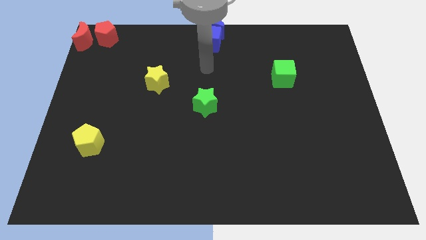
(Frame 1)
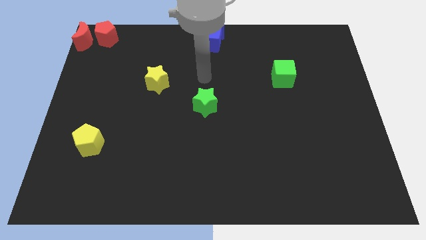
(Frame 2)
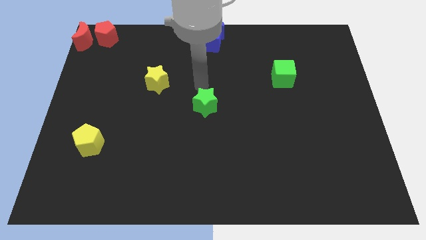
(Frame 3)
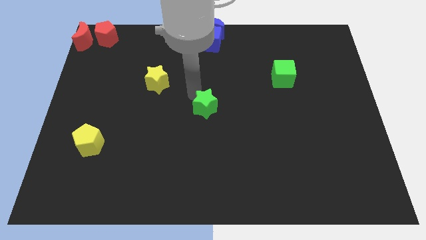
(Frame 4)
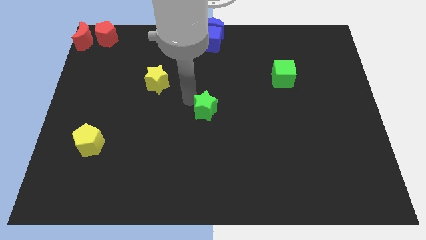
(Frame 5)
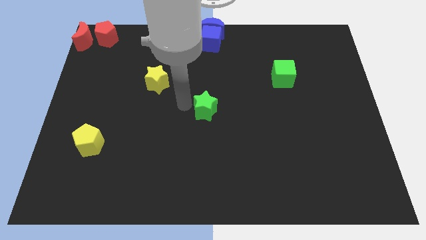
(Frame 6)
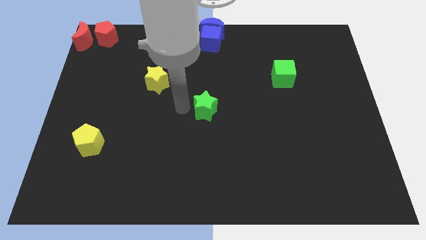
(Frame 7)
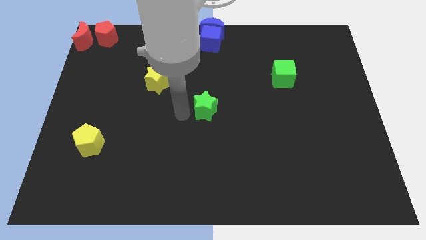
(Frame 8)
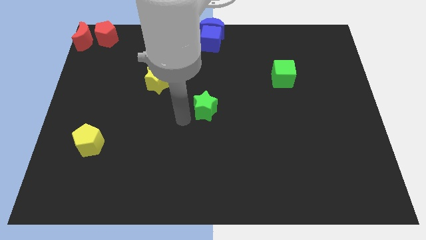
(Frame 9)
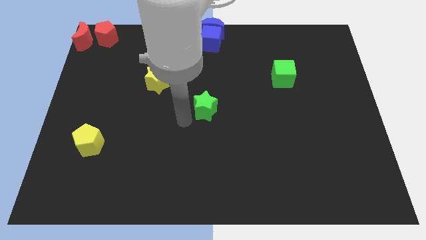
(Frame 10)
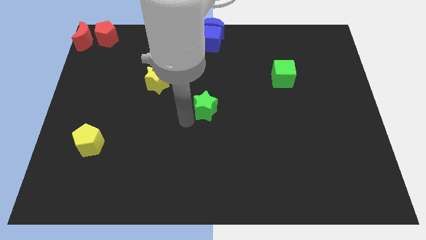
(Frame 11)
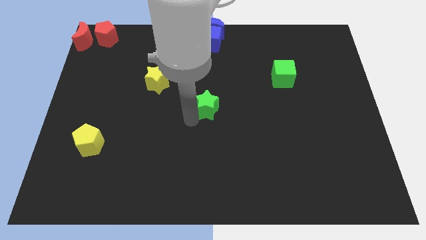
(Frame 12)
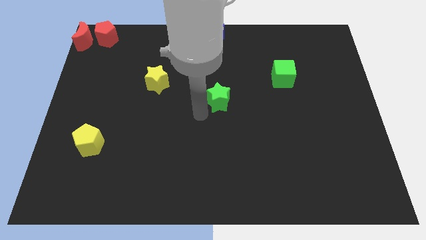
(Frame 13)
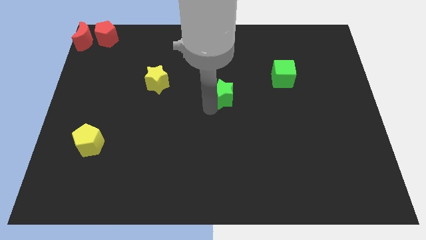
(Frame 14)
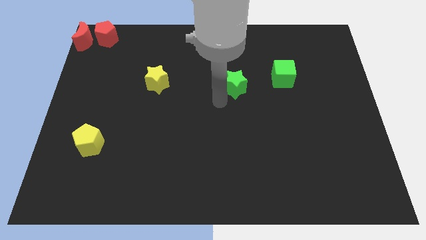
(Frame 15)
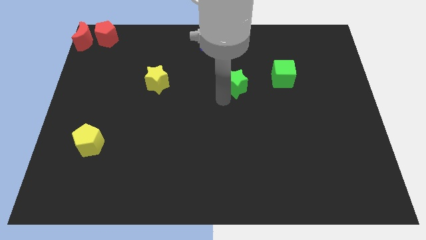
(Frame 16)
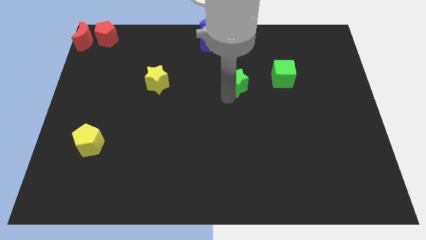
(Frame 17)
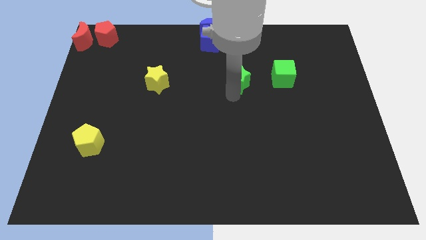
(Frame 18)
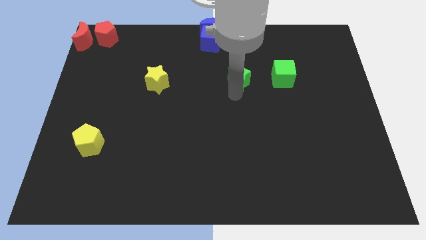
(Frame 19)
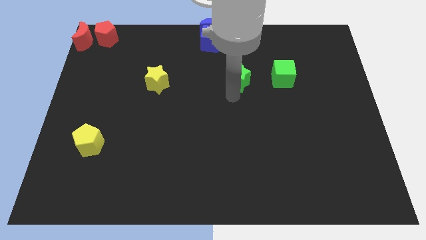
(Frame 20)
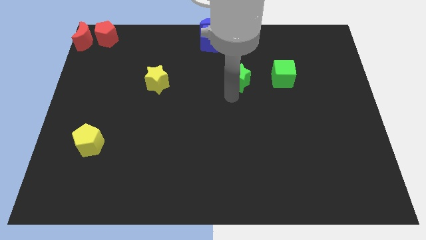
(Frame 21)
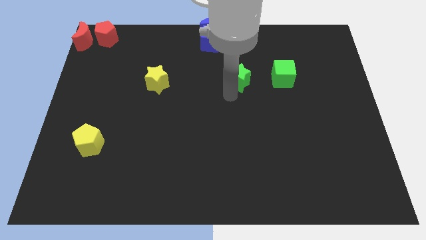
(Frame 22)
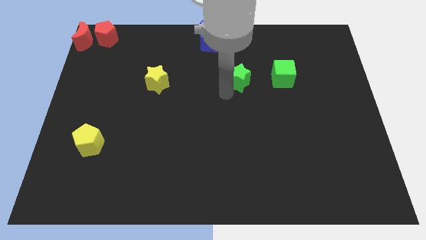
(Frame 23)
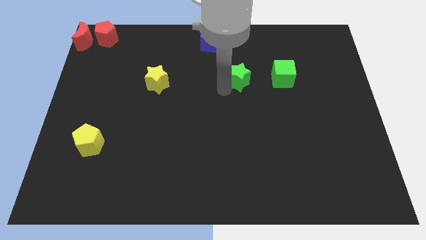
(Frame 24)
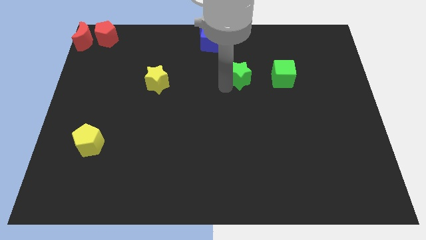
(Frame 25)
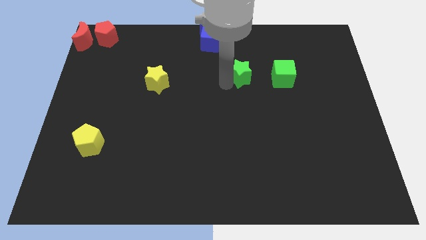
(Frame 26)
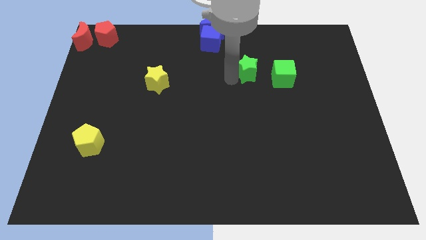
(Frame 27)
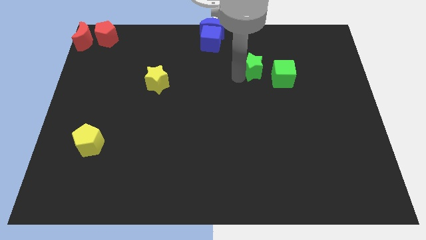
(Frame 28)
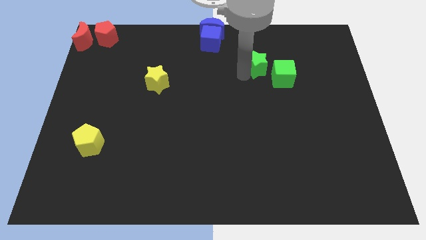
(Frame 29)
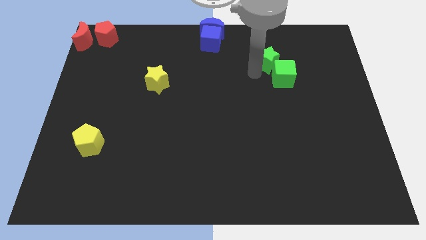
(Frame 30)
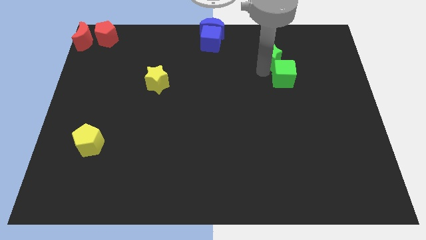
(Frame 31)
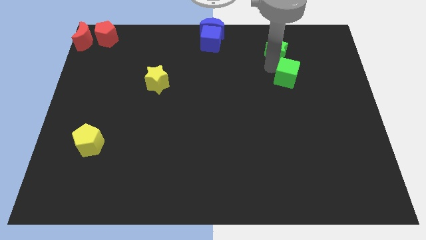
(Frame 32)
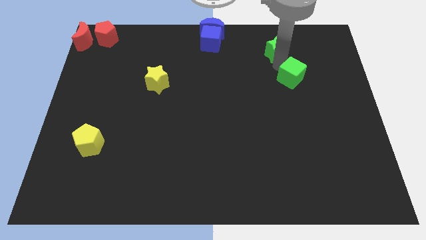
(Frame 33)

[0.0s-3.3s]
push the green star to the top left of the green cube

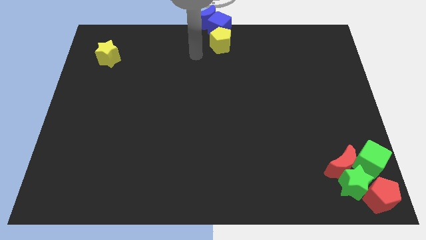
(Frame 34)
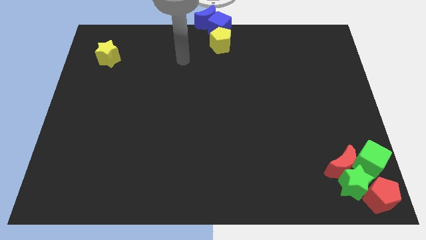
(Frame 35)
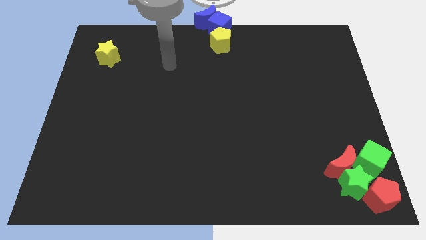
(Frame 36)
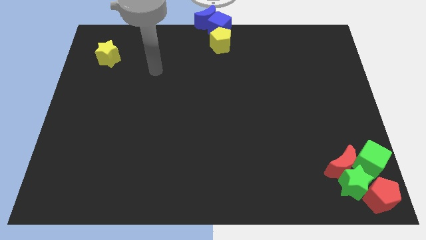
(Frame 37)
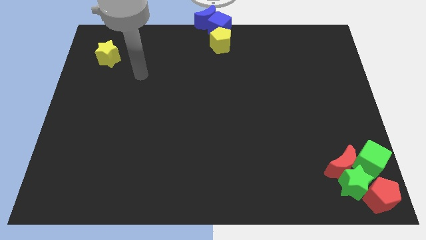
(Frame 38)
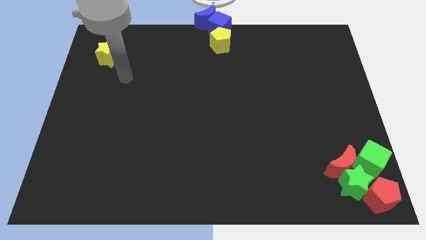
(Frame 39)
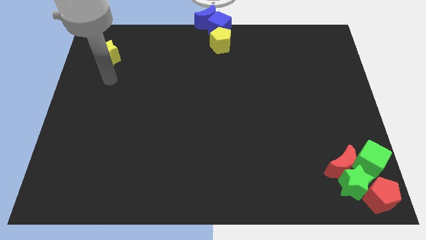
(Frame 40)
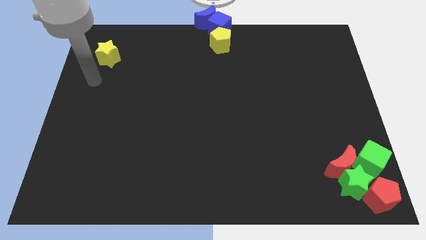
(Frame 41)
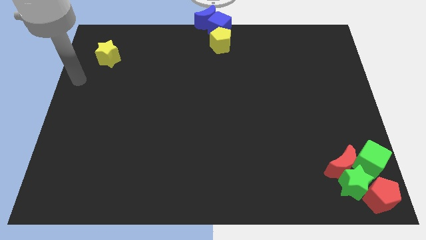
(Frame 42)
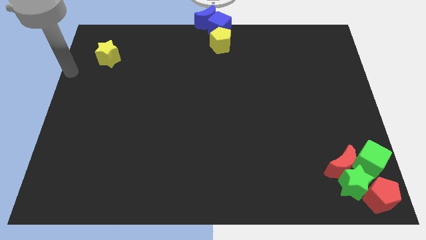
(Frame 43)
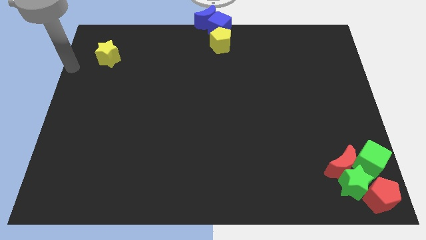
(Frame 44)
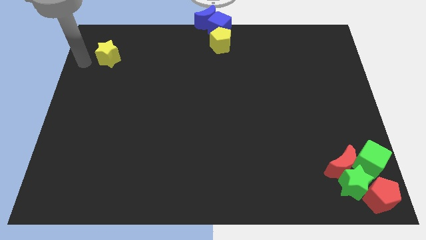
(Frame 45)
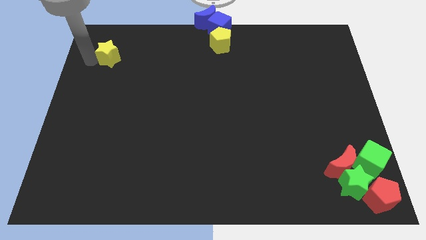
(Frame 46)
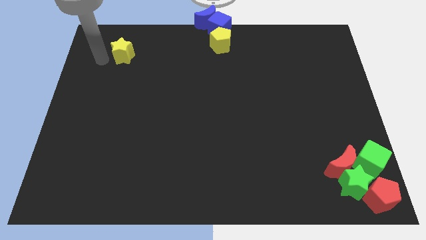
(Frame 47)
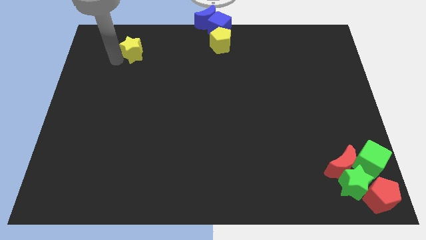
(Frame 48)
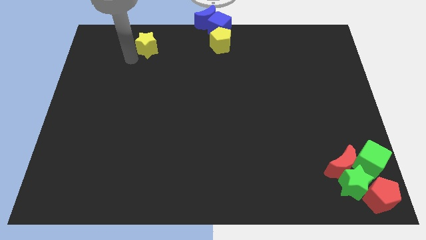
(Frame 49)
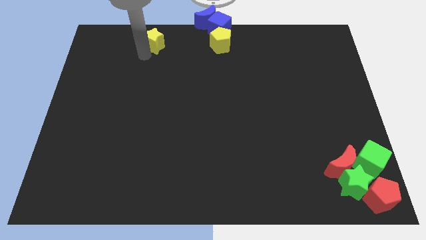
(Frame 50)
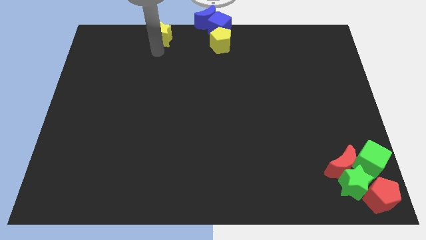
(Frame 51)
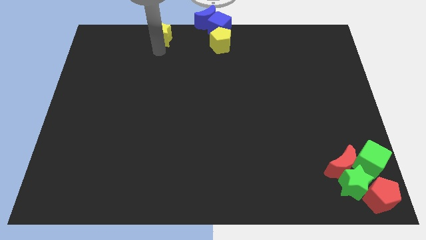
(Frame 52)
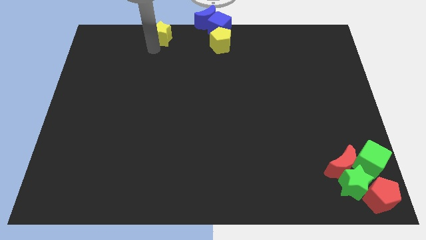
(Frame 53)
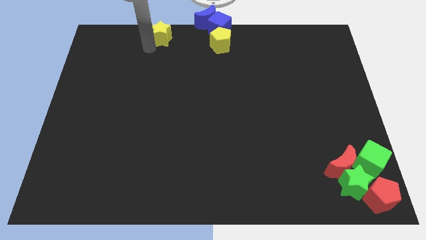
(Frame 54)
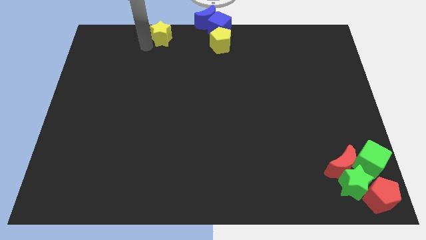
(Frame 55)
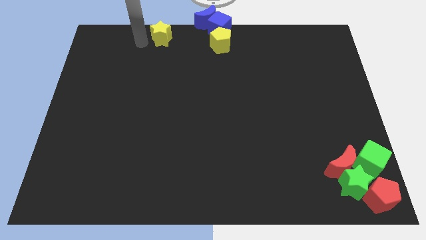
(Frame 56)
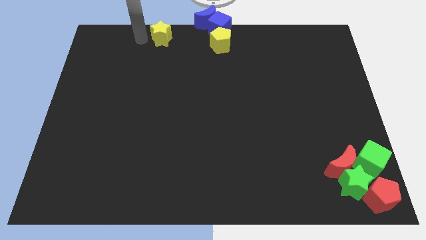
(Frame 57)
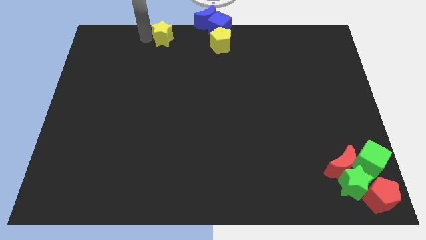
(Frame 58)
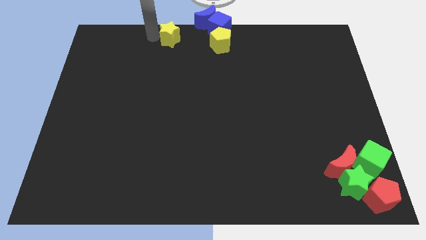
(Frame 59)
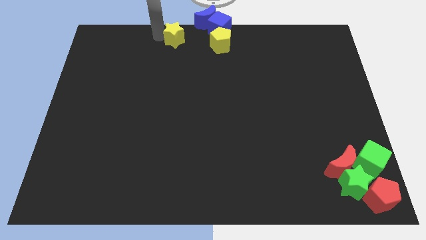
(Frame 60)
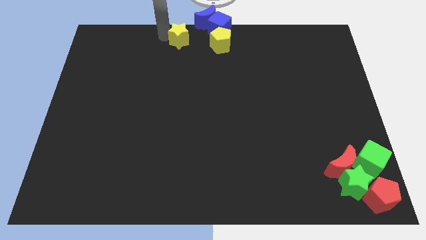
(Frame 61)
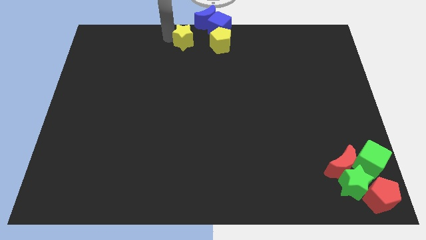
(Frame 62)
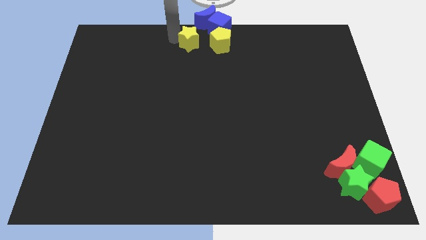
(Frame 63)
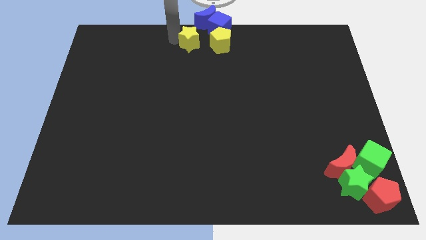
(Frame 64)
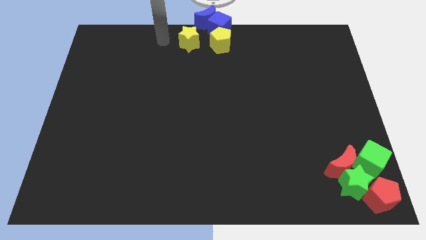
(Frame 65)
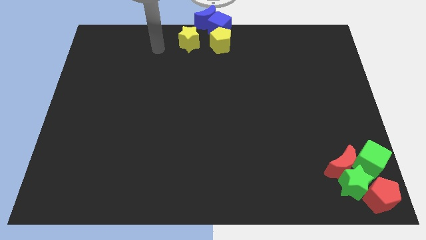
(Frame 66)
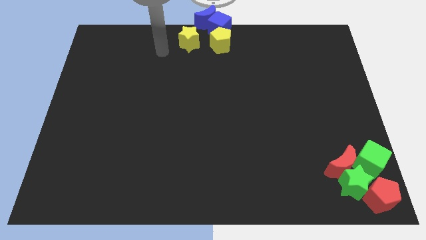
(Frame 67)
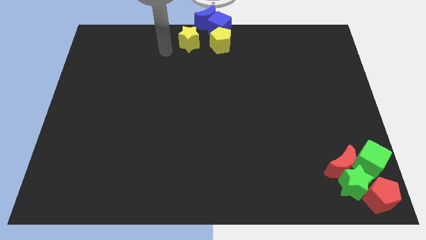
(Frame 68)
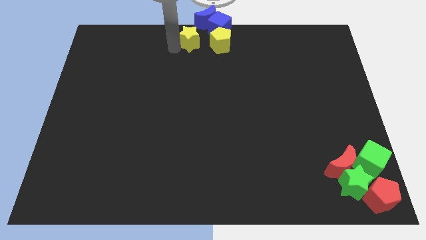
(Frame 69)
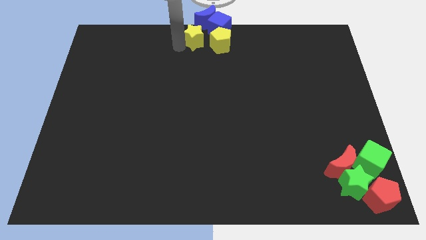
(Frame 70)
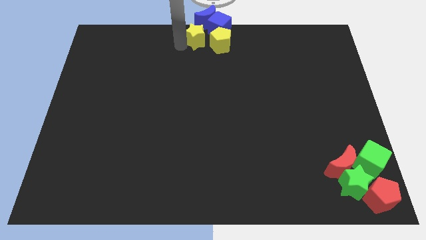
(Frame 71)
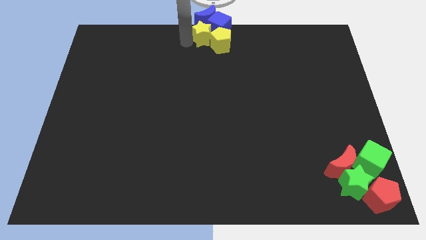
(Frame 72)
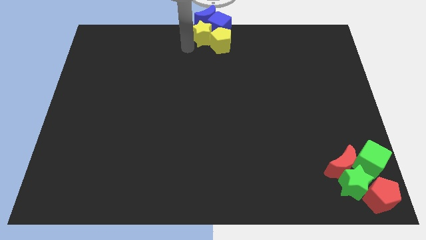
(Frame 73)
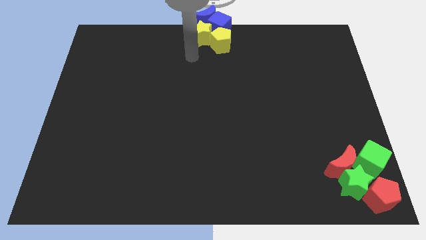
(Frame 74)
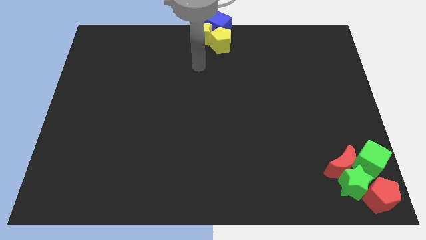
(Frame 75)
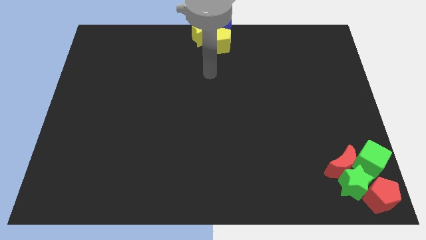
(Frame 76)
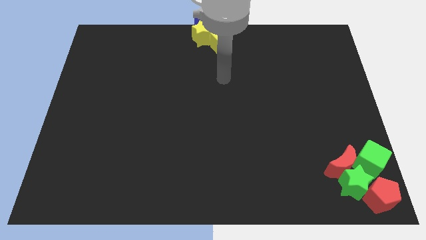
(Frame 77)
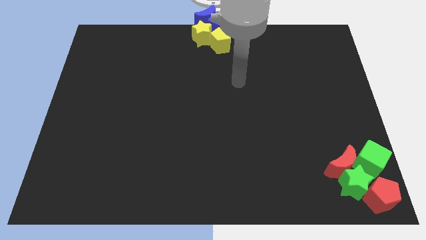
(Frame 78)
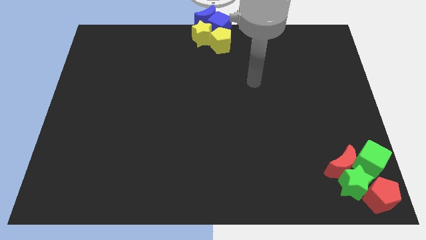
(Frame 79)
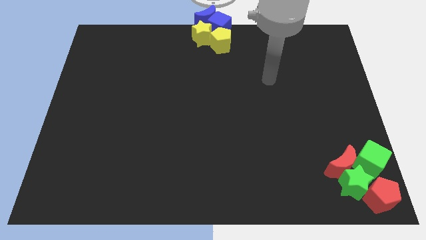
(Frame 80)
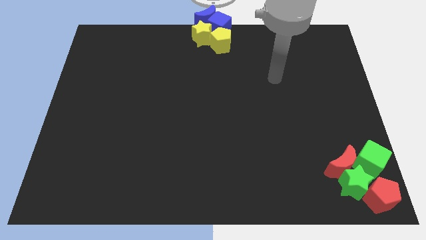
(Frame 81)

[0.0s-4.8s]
push the yellow star towards the blue cube

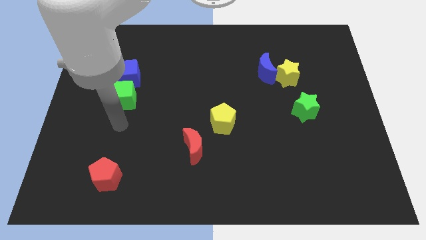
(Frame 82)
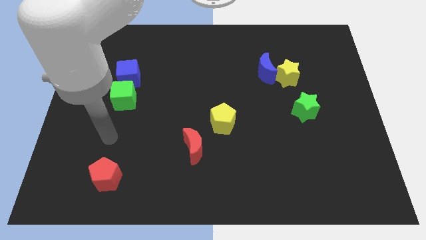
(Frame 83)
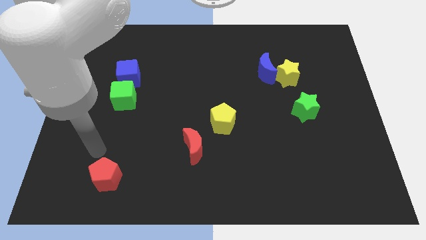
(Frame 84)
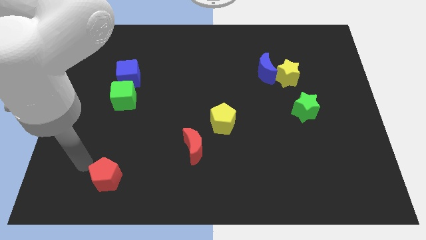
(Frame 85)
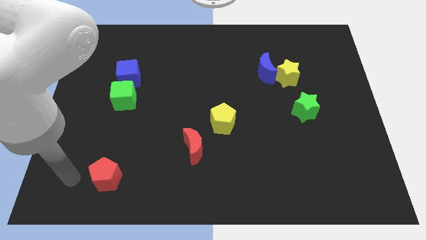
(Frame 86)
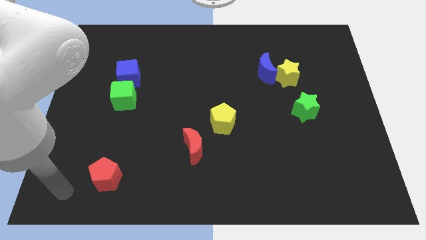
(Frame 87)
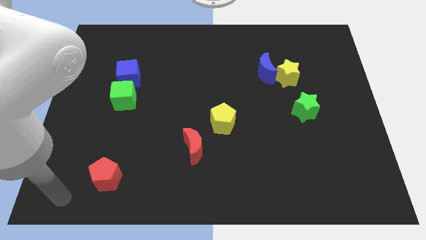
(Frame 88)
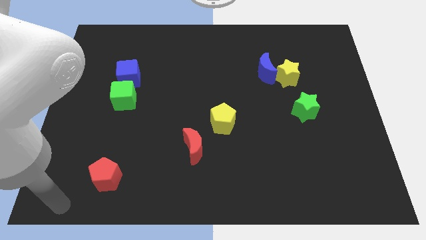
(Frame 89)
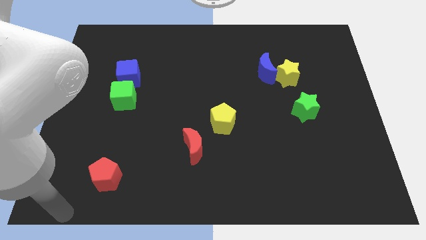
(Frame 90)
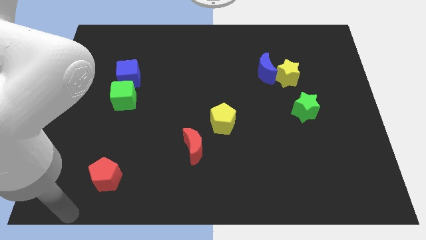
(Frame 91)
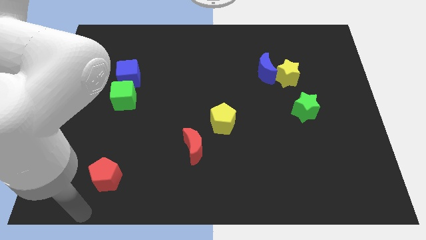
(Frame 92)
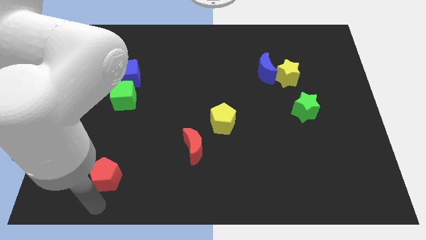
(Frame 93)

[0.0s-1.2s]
move your arm to the bottom of red pentagon
